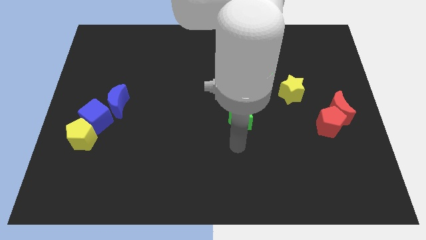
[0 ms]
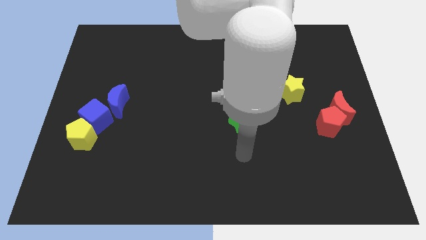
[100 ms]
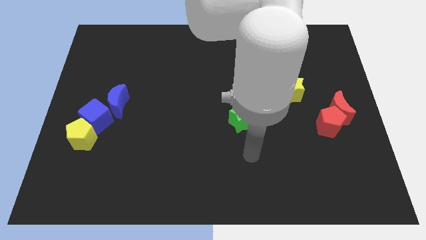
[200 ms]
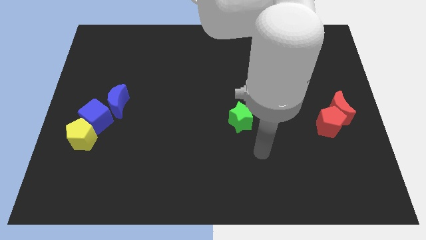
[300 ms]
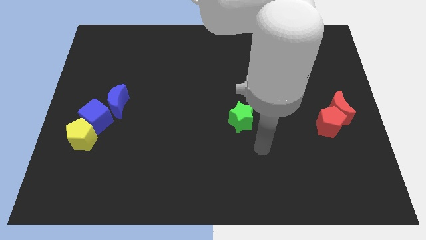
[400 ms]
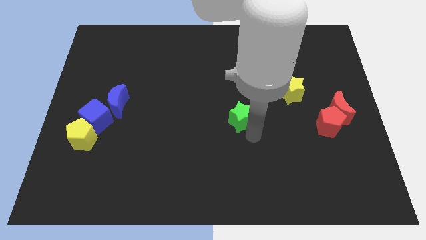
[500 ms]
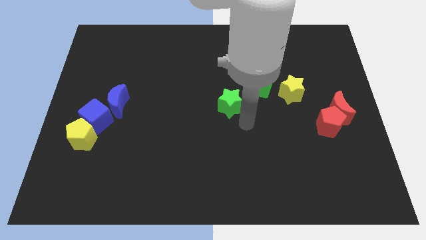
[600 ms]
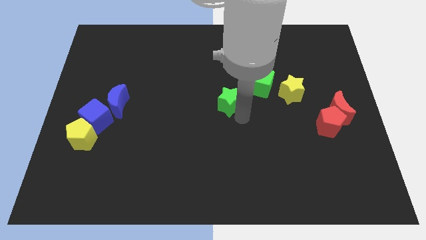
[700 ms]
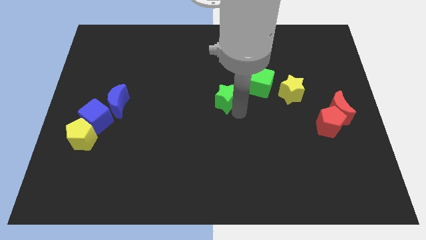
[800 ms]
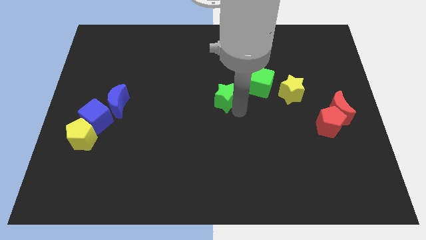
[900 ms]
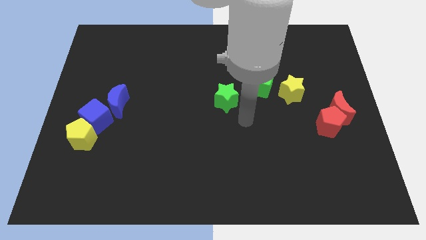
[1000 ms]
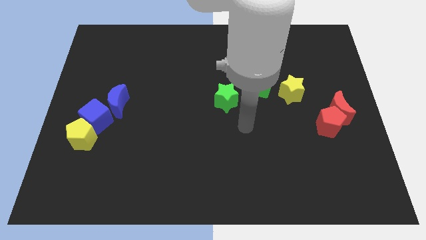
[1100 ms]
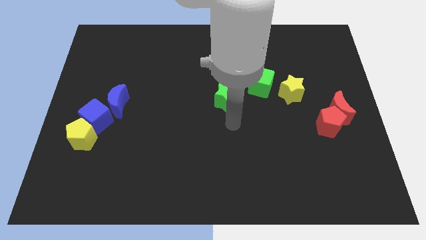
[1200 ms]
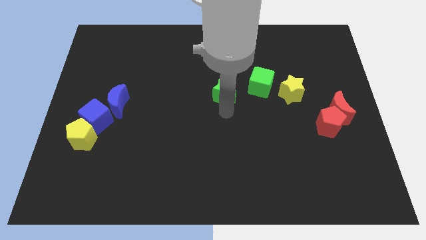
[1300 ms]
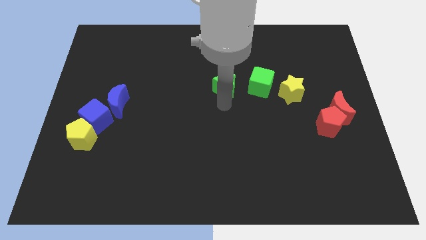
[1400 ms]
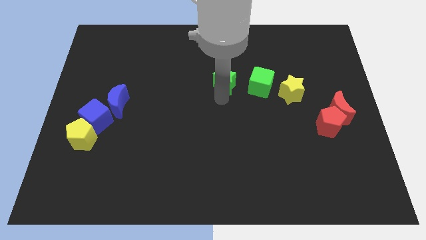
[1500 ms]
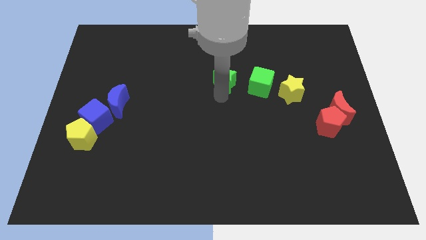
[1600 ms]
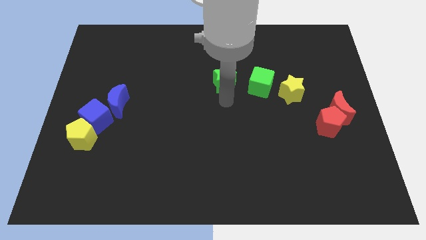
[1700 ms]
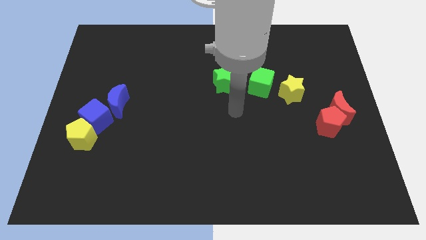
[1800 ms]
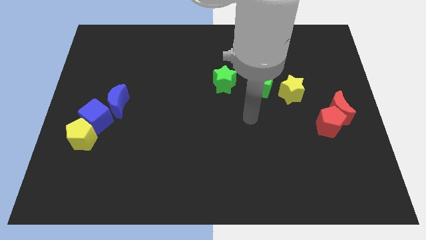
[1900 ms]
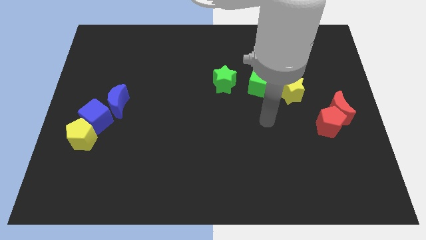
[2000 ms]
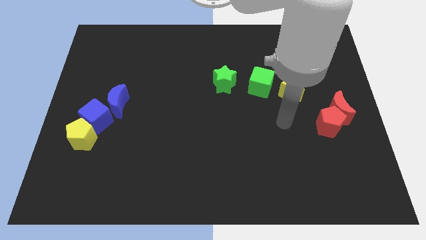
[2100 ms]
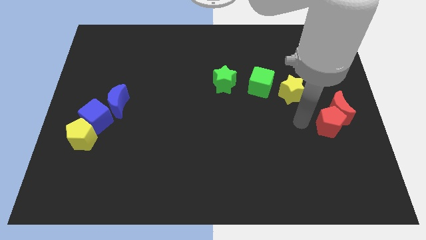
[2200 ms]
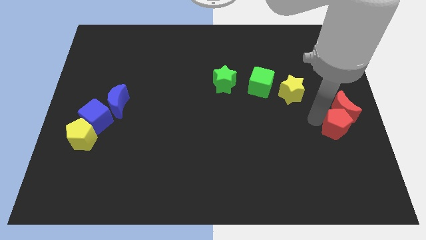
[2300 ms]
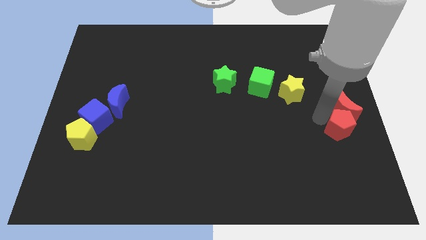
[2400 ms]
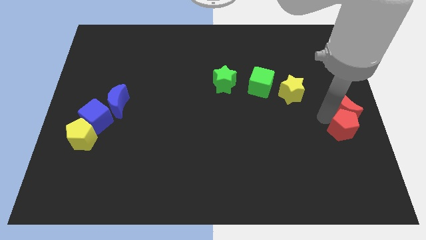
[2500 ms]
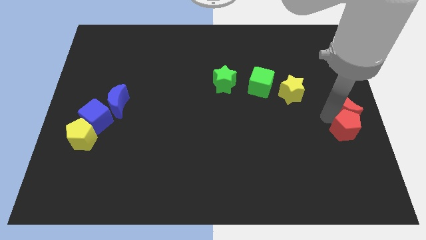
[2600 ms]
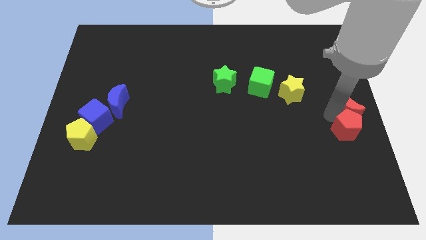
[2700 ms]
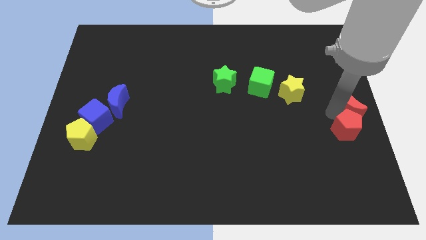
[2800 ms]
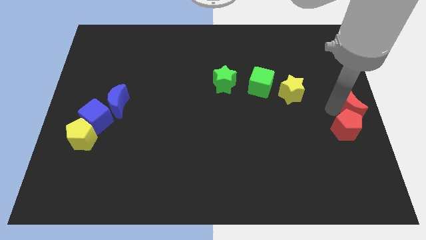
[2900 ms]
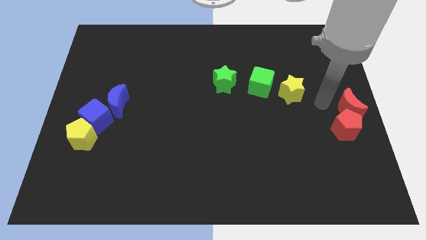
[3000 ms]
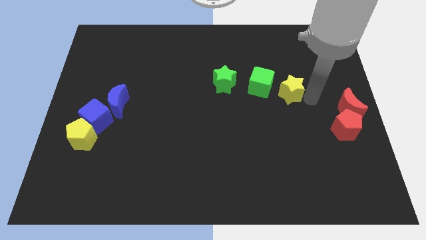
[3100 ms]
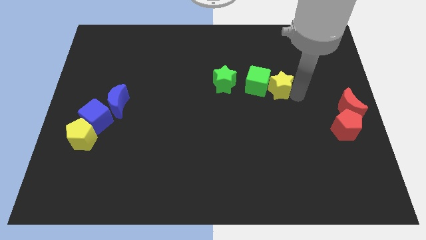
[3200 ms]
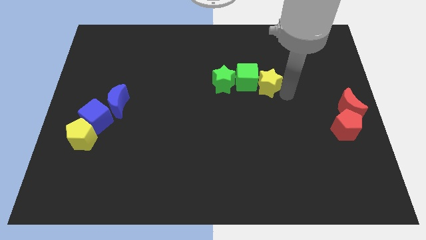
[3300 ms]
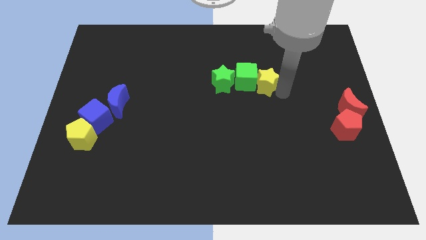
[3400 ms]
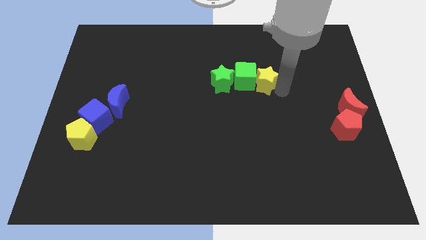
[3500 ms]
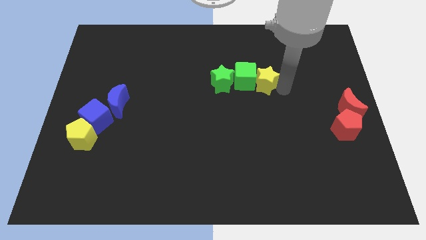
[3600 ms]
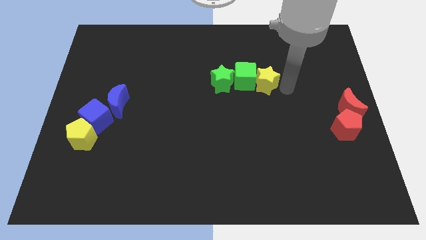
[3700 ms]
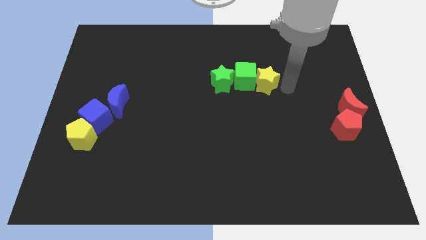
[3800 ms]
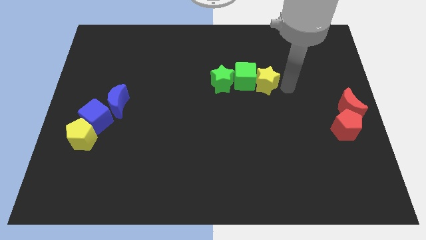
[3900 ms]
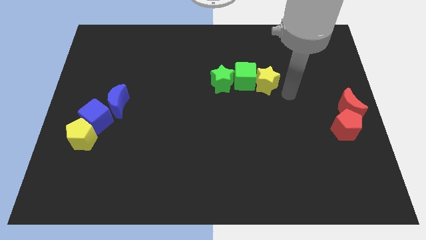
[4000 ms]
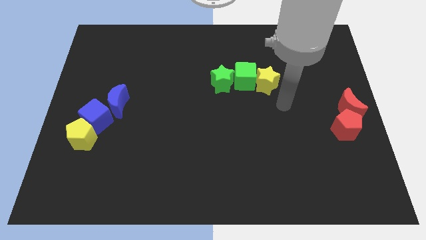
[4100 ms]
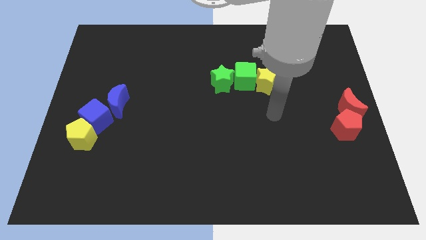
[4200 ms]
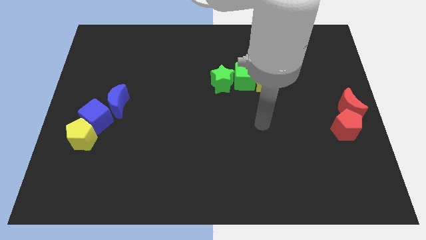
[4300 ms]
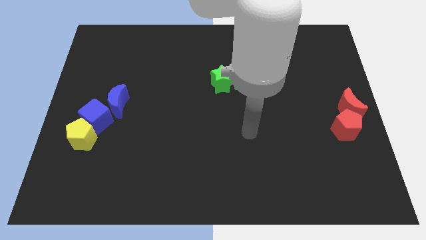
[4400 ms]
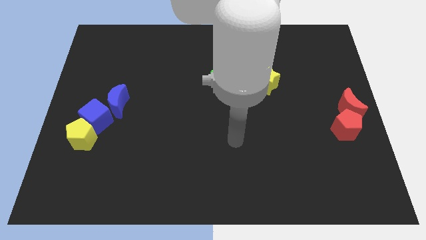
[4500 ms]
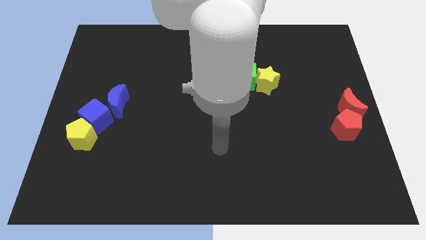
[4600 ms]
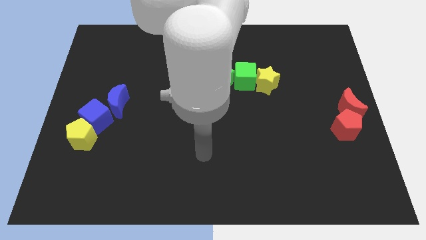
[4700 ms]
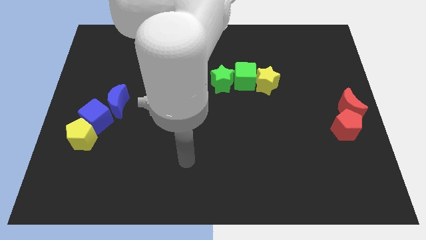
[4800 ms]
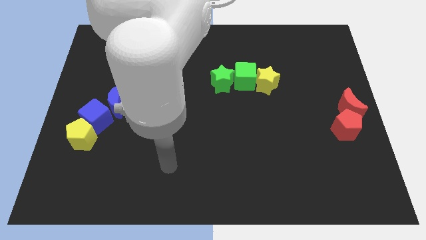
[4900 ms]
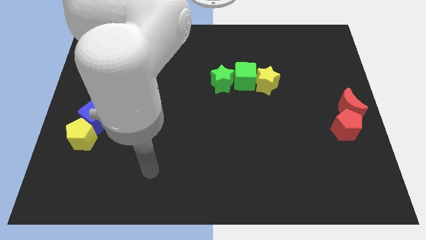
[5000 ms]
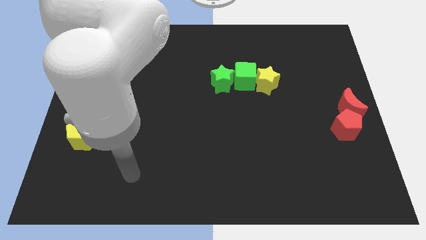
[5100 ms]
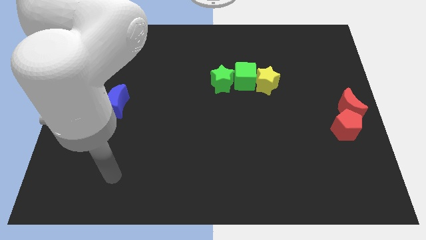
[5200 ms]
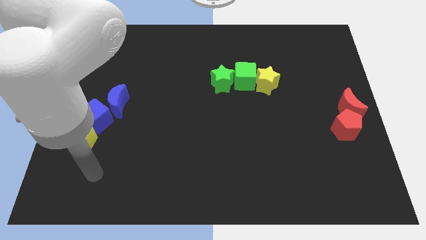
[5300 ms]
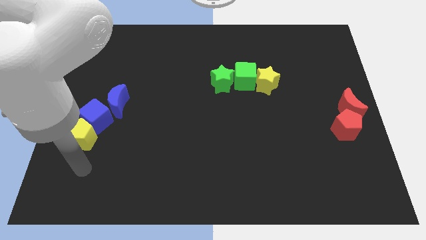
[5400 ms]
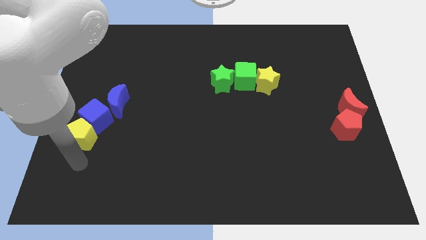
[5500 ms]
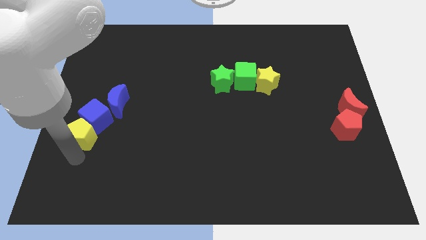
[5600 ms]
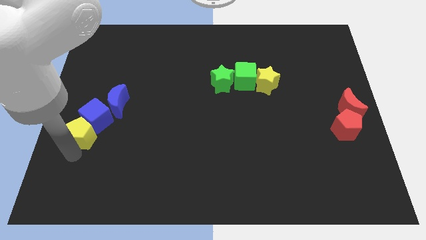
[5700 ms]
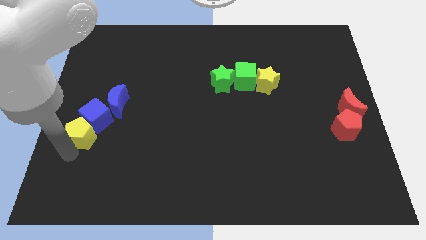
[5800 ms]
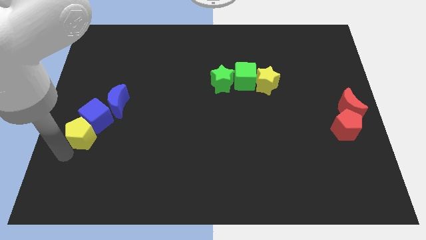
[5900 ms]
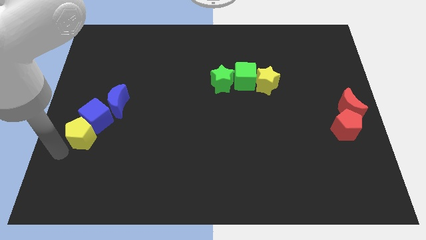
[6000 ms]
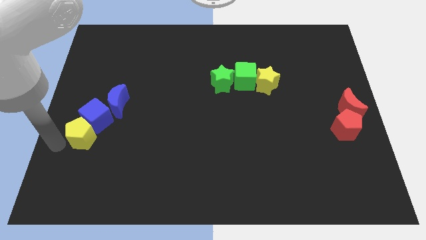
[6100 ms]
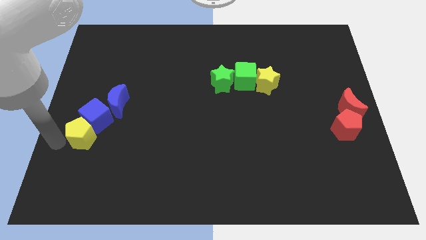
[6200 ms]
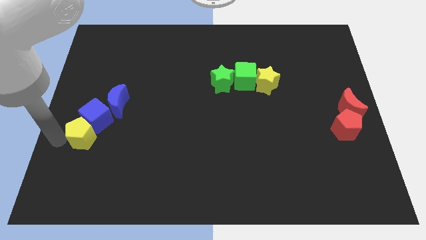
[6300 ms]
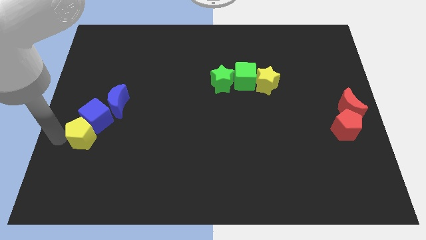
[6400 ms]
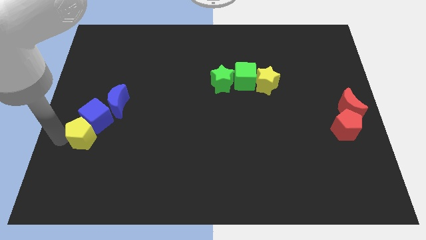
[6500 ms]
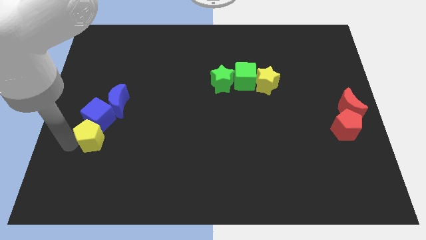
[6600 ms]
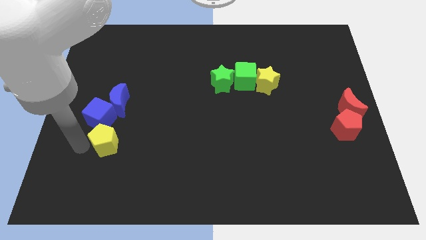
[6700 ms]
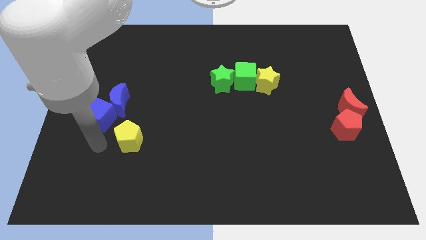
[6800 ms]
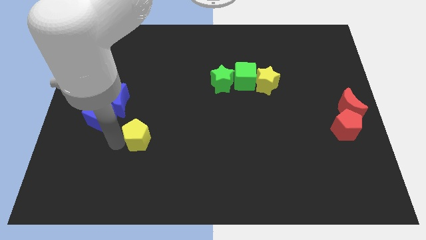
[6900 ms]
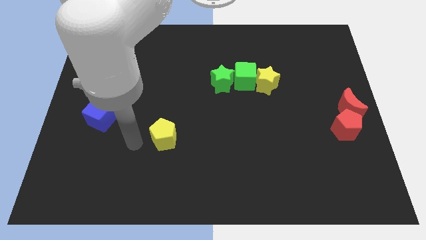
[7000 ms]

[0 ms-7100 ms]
move the yellow pentagon slightly right

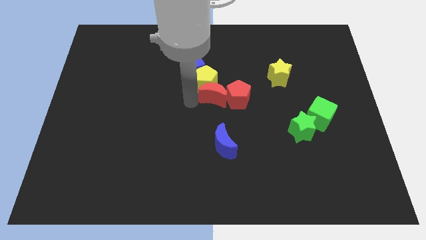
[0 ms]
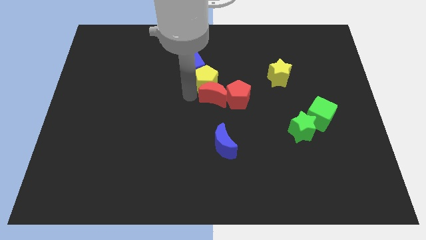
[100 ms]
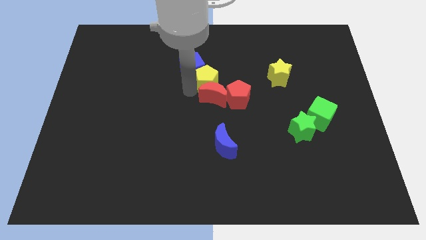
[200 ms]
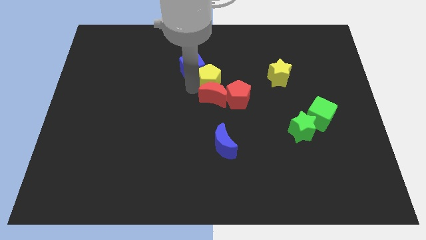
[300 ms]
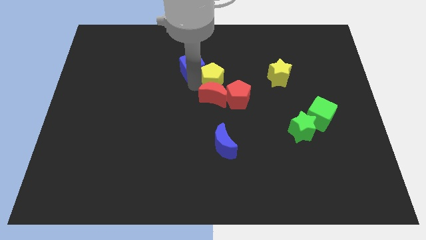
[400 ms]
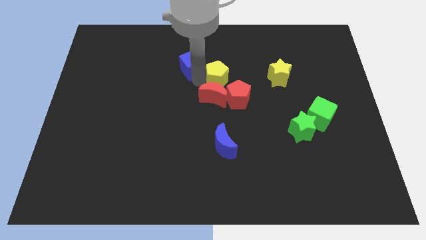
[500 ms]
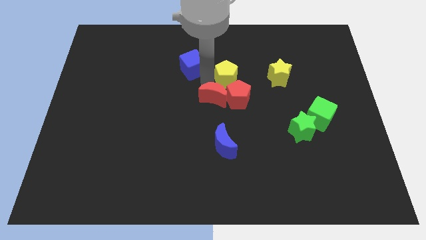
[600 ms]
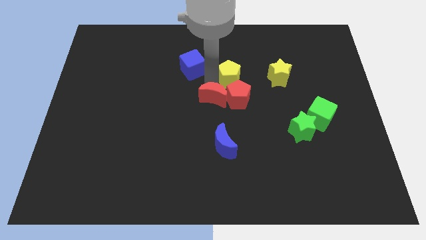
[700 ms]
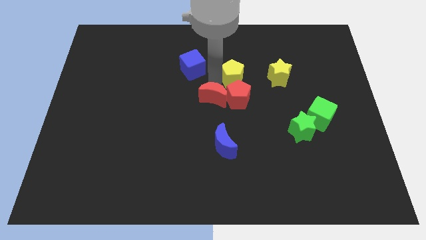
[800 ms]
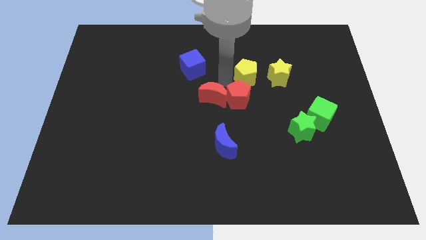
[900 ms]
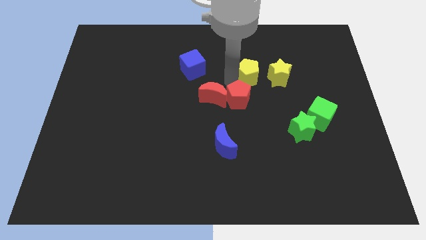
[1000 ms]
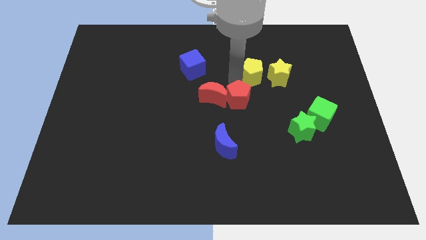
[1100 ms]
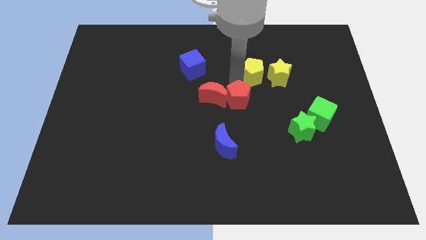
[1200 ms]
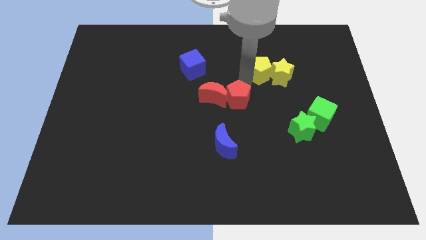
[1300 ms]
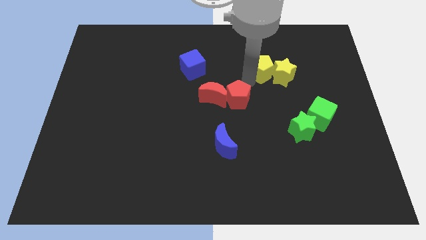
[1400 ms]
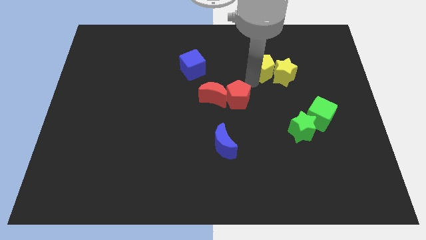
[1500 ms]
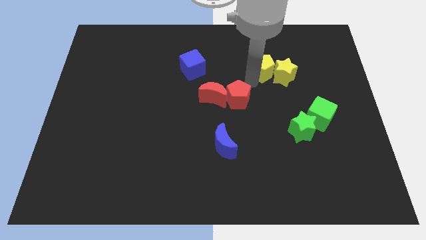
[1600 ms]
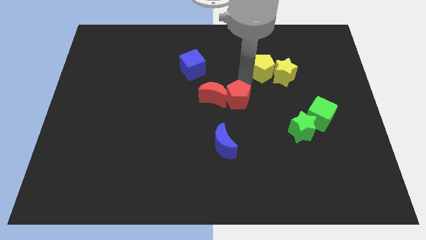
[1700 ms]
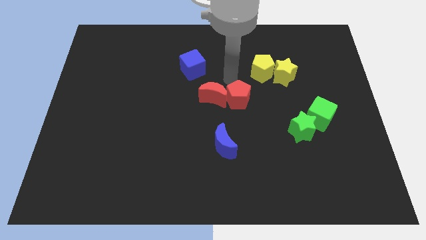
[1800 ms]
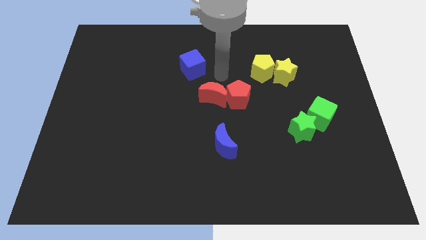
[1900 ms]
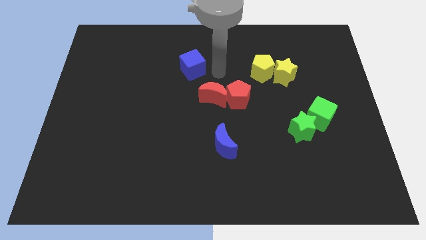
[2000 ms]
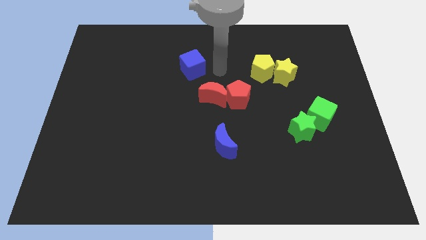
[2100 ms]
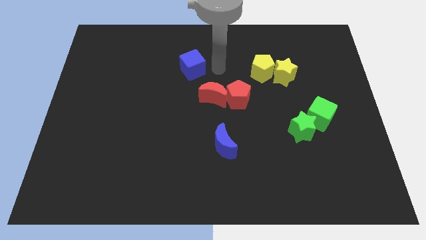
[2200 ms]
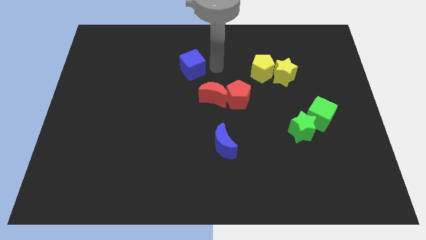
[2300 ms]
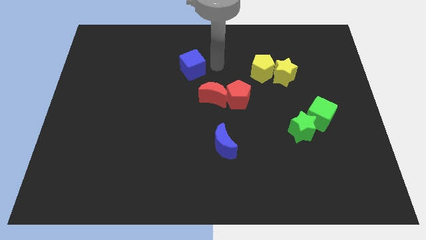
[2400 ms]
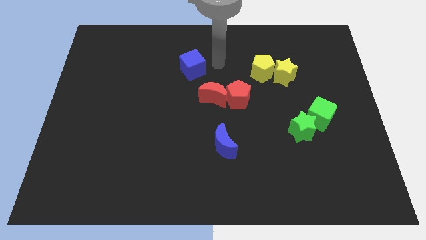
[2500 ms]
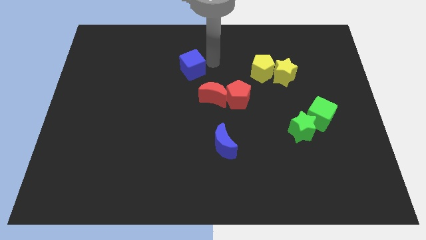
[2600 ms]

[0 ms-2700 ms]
push yellow pentagon in to yellow star
